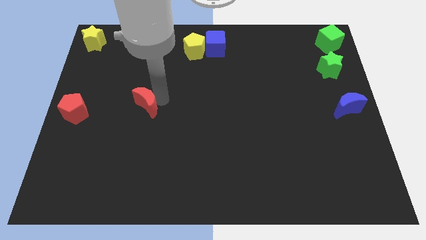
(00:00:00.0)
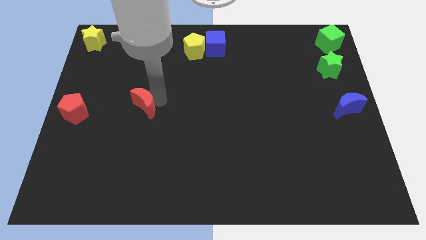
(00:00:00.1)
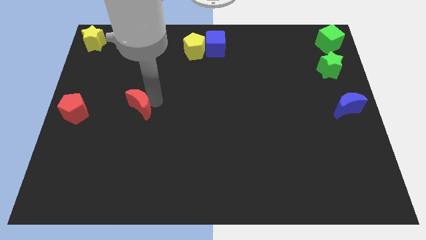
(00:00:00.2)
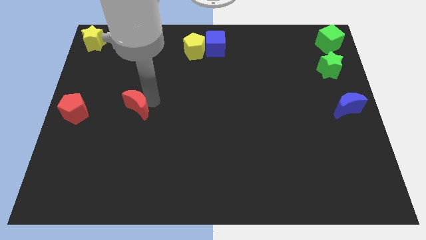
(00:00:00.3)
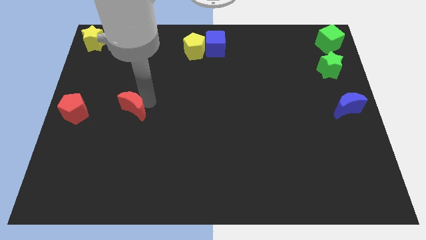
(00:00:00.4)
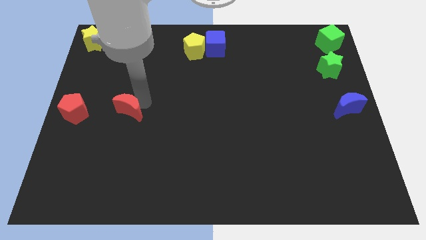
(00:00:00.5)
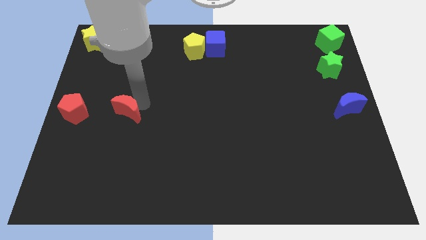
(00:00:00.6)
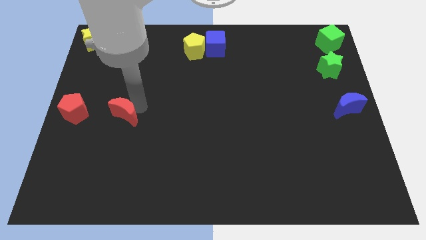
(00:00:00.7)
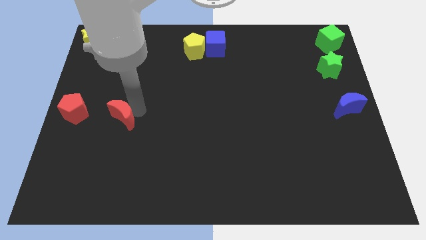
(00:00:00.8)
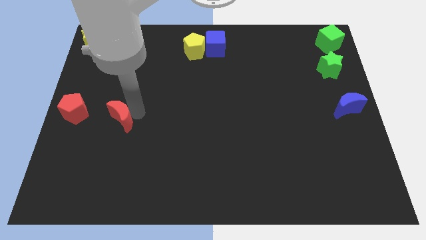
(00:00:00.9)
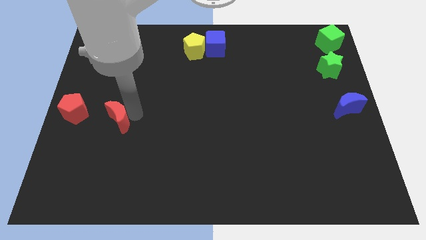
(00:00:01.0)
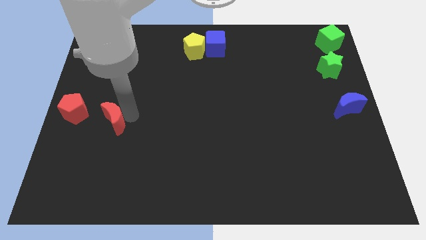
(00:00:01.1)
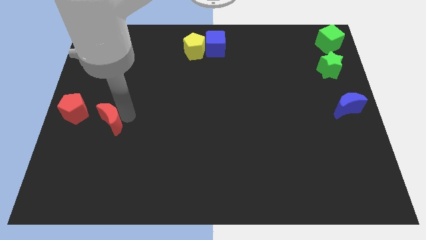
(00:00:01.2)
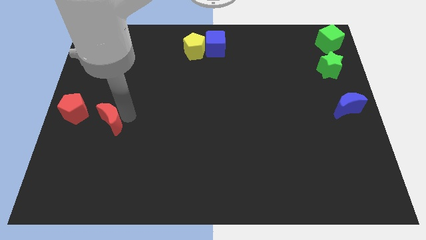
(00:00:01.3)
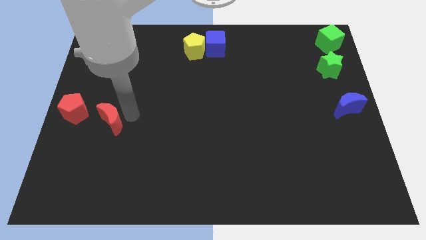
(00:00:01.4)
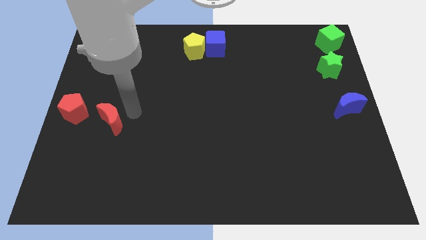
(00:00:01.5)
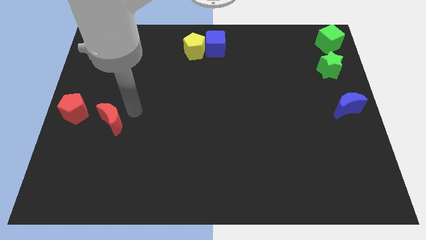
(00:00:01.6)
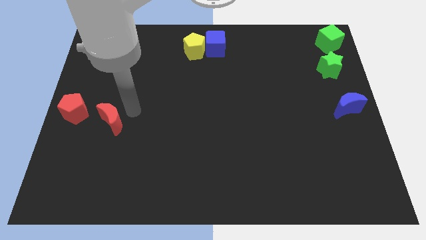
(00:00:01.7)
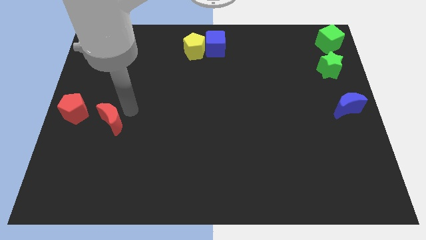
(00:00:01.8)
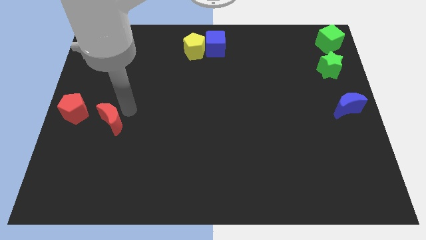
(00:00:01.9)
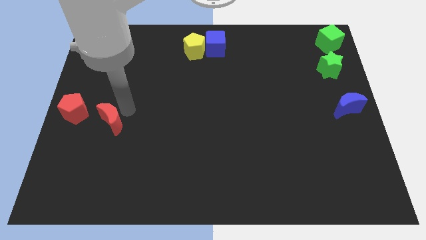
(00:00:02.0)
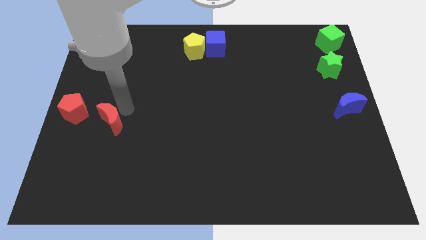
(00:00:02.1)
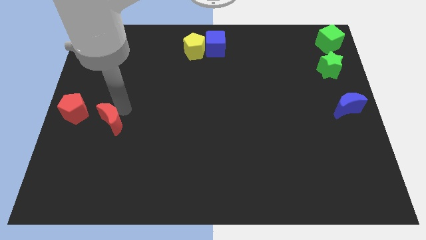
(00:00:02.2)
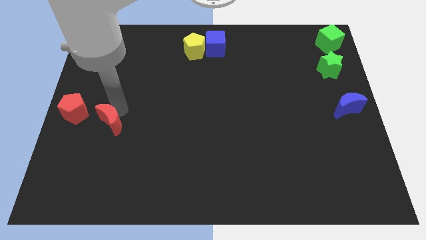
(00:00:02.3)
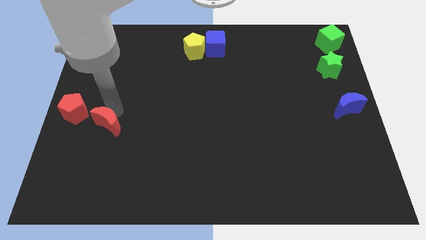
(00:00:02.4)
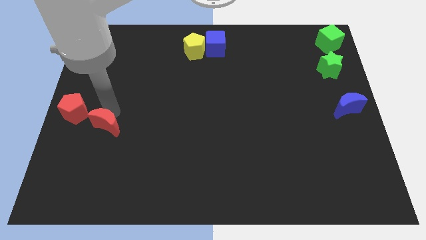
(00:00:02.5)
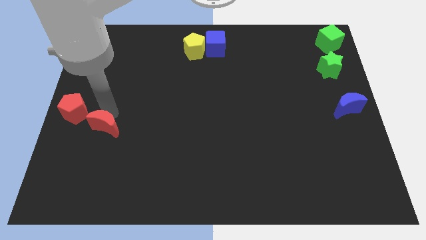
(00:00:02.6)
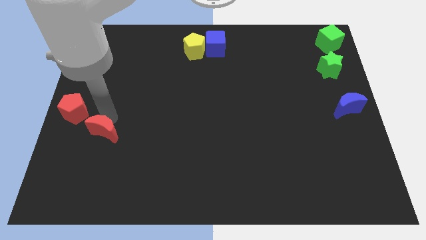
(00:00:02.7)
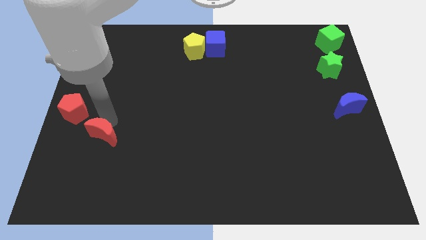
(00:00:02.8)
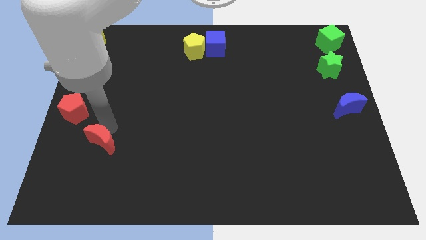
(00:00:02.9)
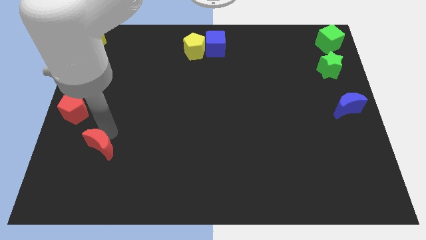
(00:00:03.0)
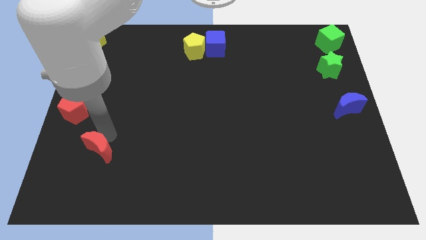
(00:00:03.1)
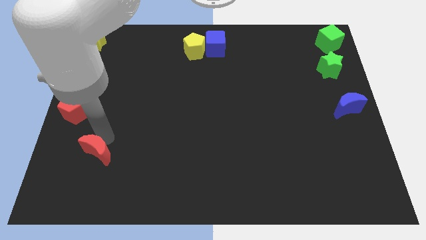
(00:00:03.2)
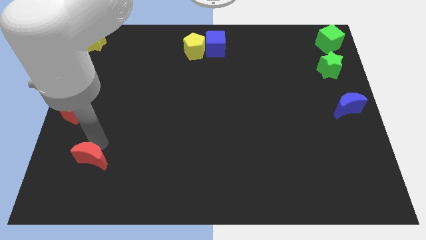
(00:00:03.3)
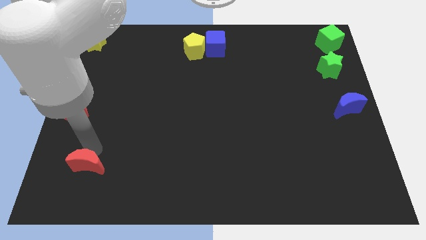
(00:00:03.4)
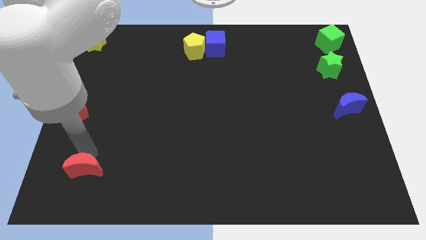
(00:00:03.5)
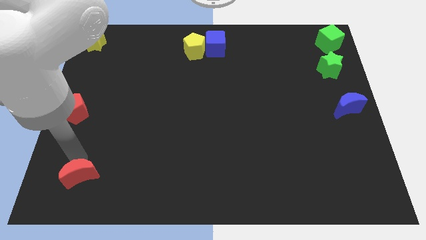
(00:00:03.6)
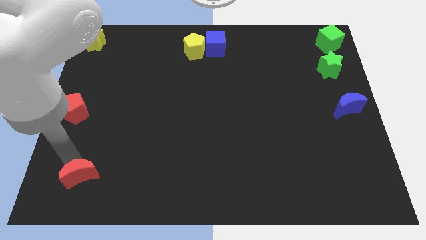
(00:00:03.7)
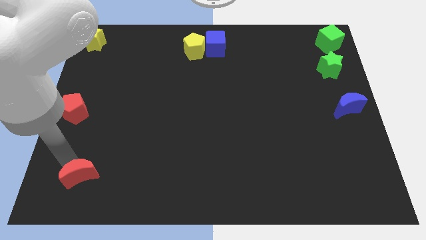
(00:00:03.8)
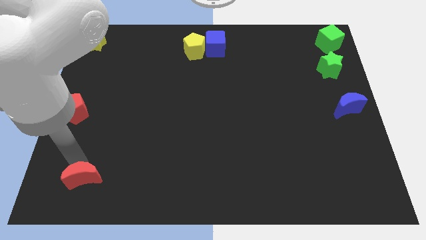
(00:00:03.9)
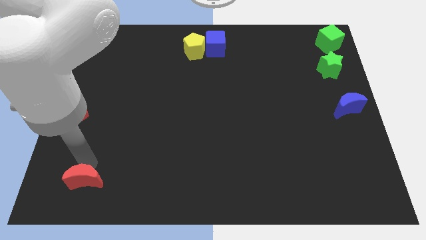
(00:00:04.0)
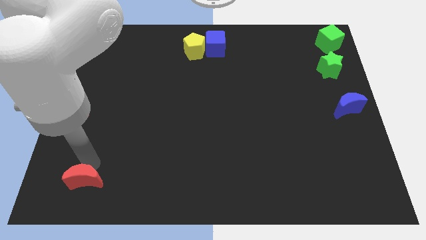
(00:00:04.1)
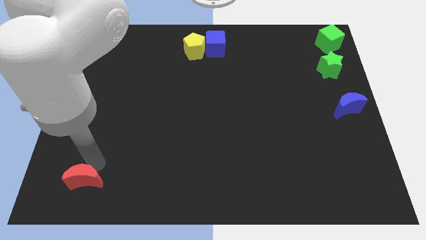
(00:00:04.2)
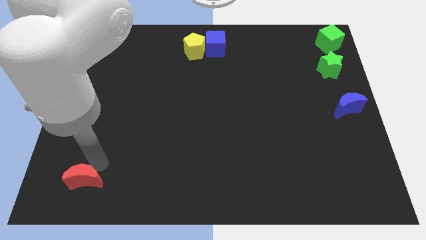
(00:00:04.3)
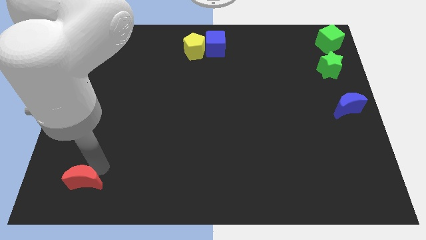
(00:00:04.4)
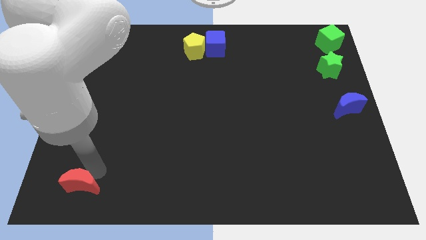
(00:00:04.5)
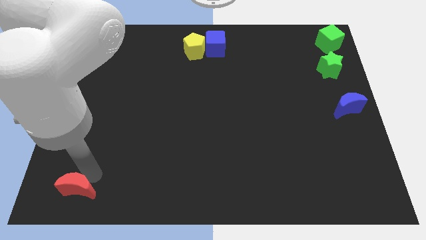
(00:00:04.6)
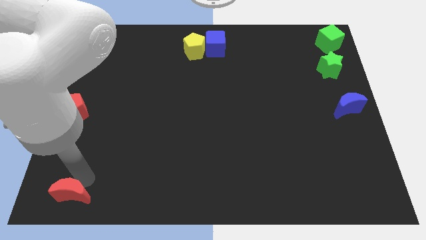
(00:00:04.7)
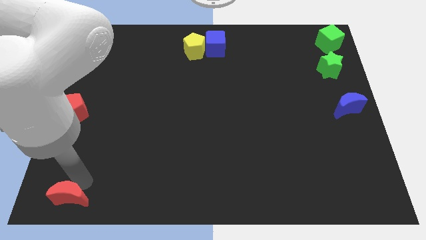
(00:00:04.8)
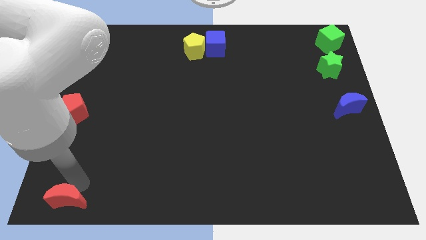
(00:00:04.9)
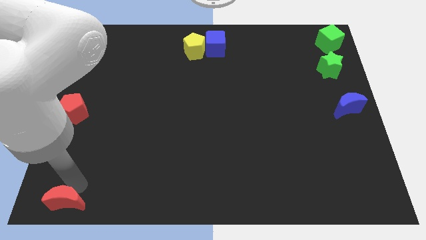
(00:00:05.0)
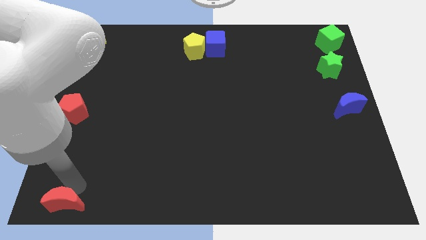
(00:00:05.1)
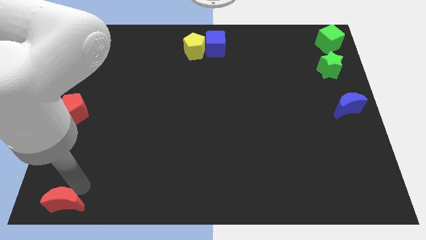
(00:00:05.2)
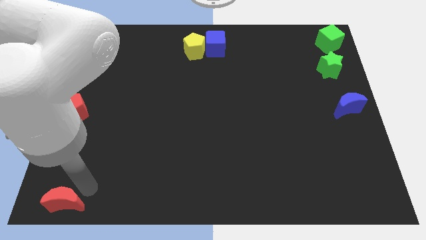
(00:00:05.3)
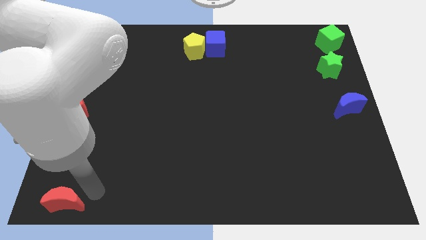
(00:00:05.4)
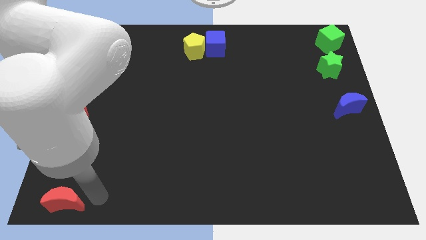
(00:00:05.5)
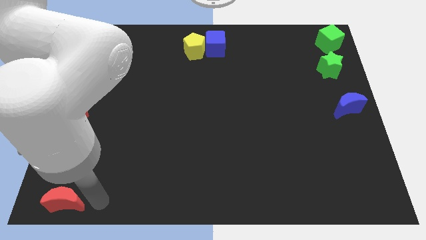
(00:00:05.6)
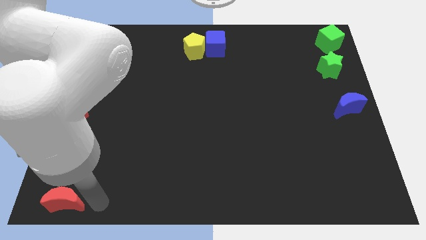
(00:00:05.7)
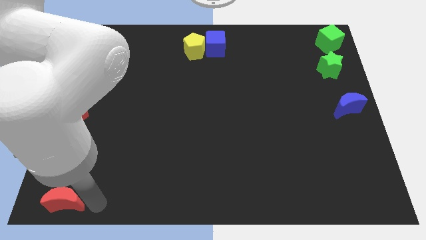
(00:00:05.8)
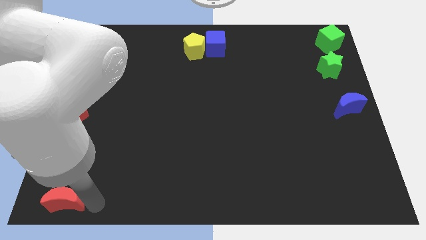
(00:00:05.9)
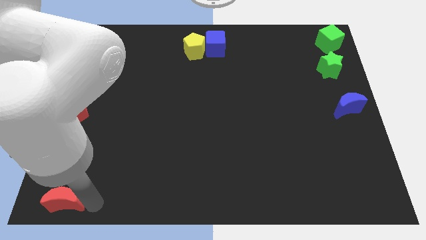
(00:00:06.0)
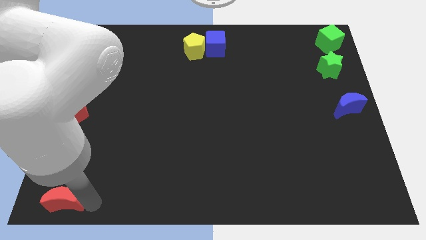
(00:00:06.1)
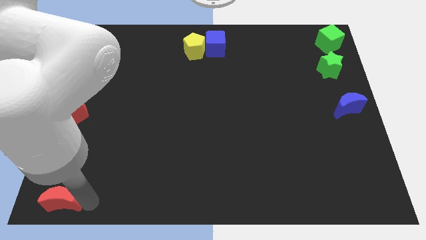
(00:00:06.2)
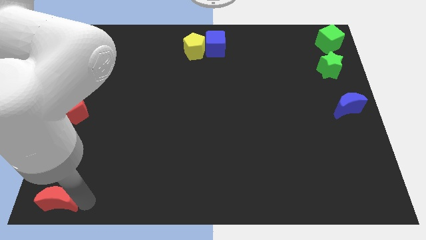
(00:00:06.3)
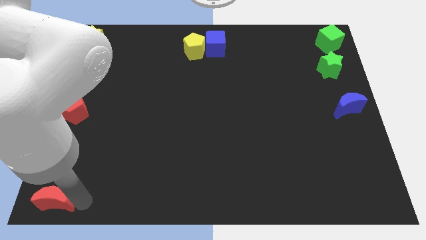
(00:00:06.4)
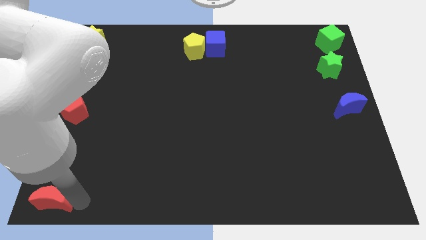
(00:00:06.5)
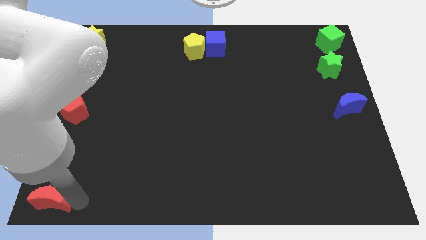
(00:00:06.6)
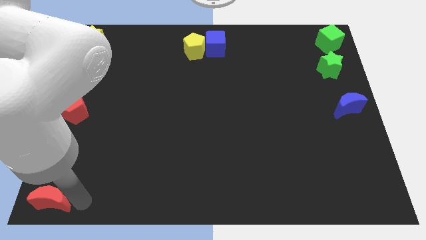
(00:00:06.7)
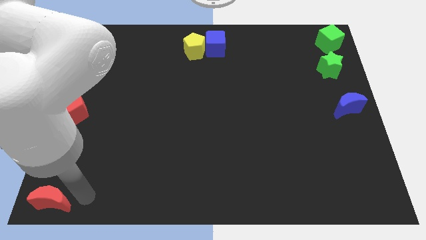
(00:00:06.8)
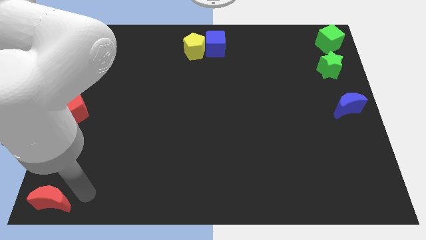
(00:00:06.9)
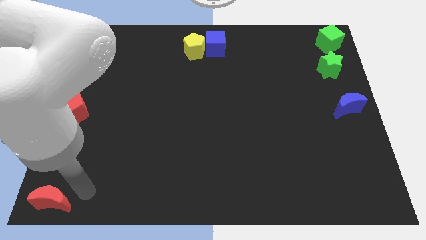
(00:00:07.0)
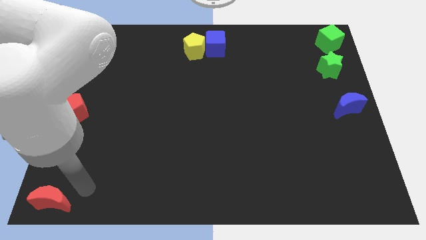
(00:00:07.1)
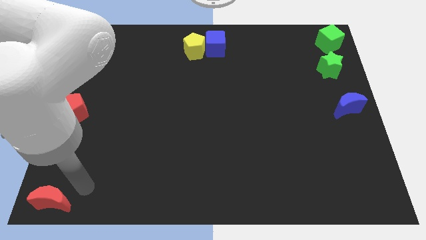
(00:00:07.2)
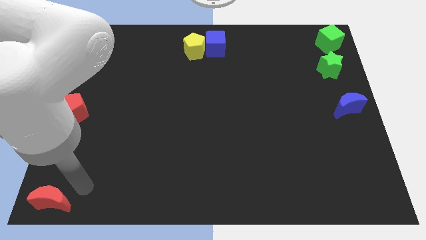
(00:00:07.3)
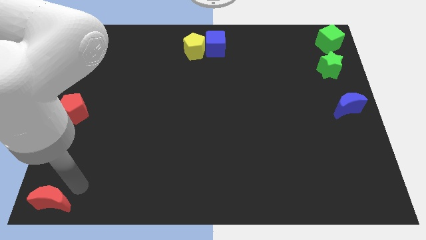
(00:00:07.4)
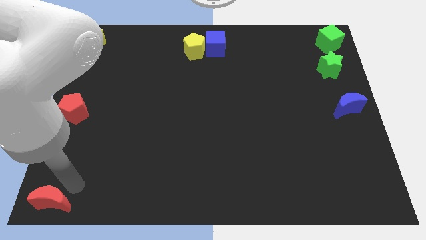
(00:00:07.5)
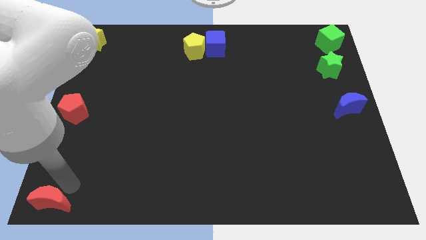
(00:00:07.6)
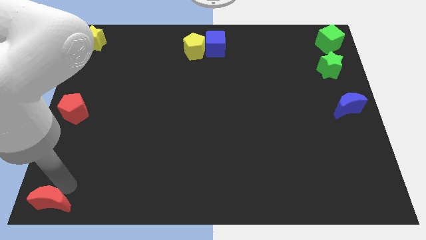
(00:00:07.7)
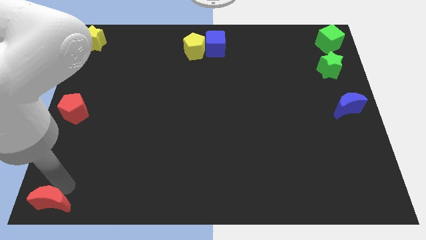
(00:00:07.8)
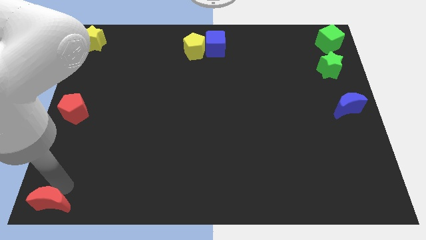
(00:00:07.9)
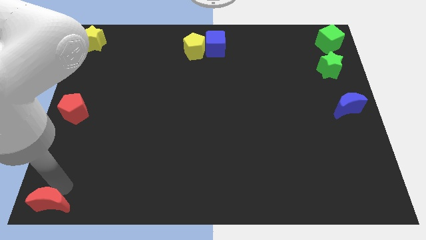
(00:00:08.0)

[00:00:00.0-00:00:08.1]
move red moon towards bottom left side of the board

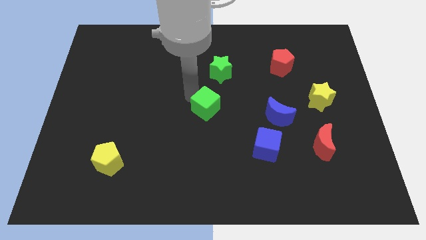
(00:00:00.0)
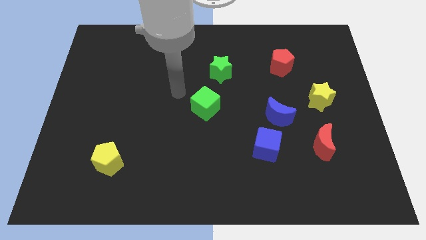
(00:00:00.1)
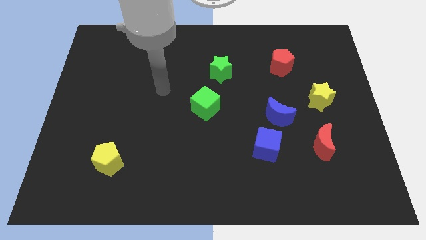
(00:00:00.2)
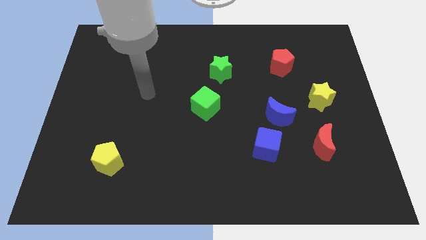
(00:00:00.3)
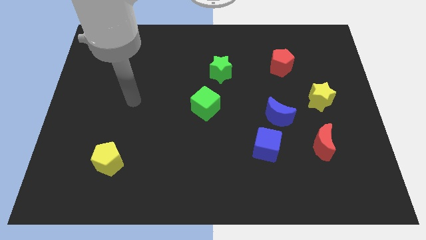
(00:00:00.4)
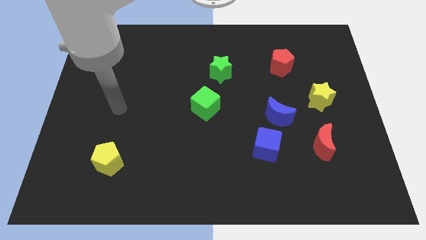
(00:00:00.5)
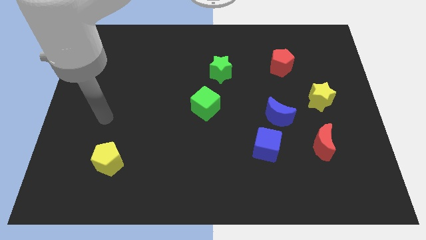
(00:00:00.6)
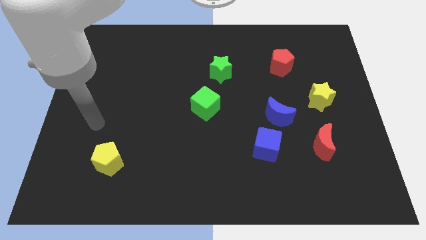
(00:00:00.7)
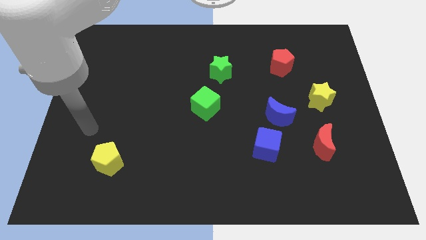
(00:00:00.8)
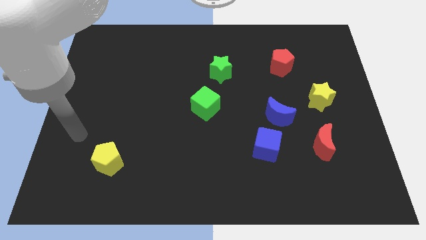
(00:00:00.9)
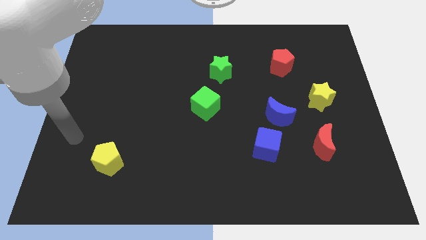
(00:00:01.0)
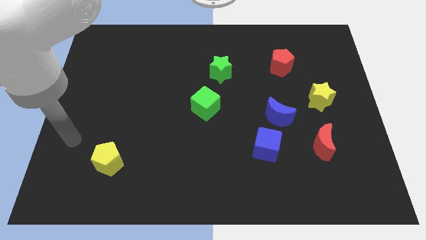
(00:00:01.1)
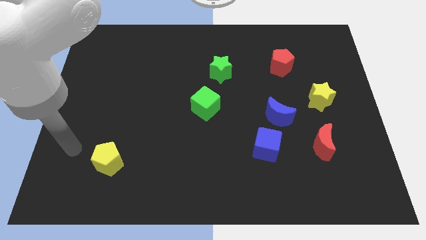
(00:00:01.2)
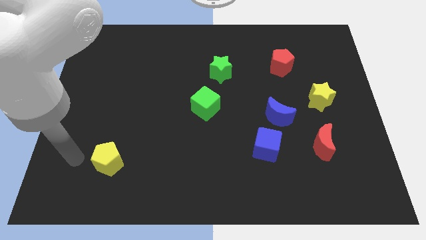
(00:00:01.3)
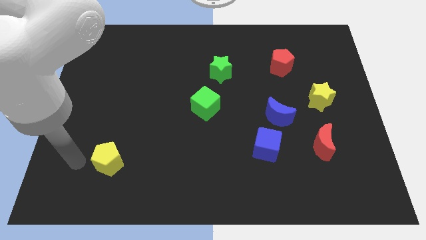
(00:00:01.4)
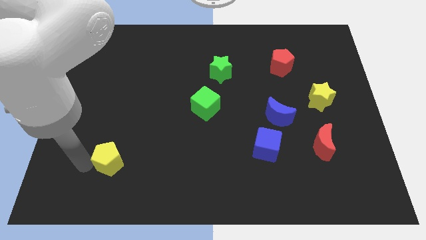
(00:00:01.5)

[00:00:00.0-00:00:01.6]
place the arm left to the yellow pentagon
